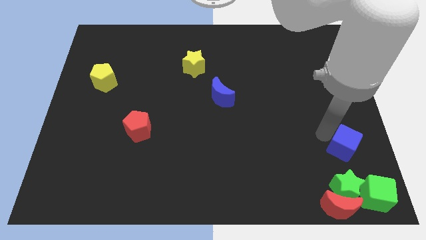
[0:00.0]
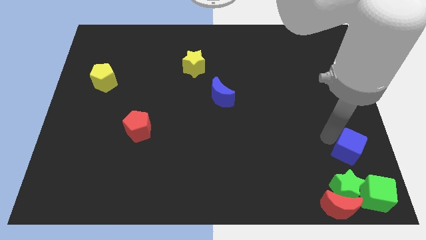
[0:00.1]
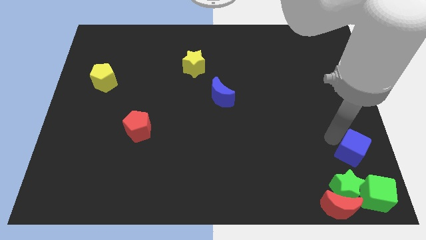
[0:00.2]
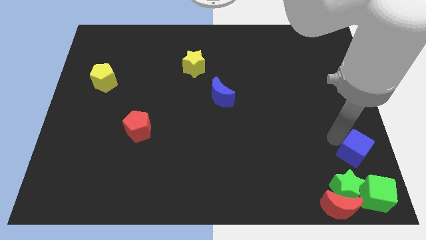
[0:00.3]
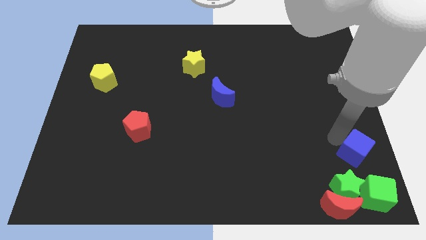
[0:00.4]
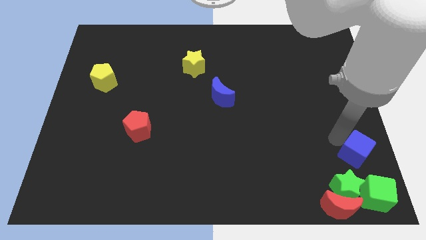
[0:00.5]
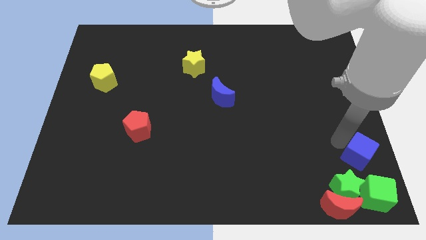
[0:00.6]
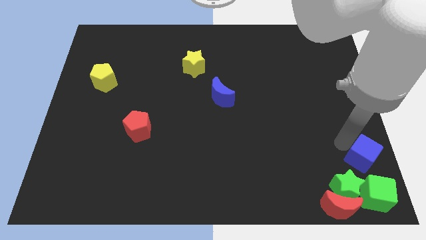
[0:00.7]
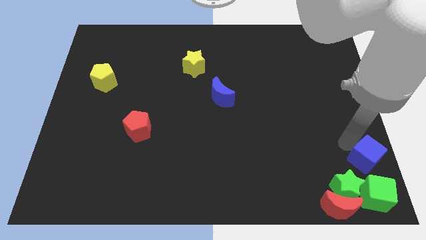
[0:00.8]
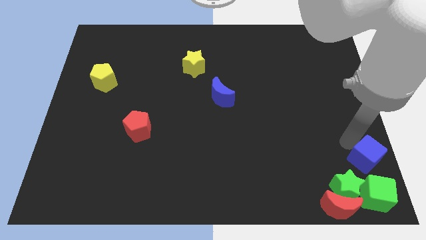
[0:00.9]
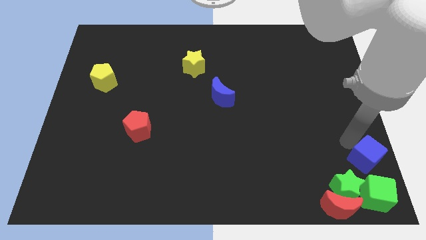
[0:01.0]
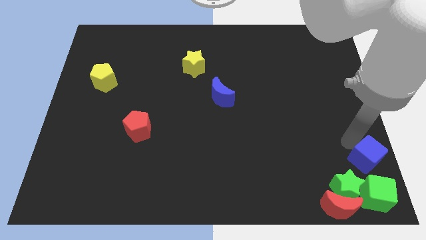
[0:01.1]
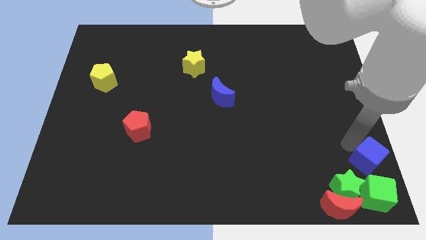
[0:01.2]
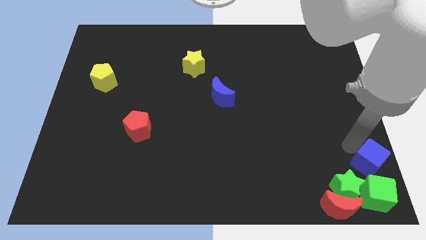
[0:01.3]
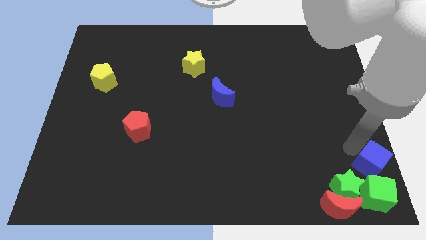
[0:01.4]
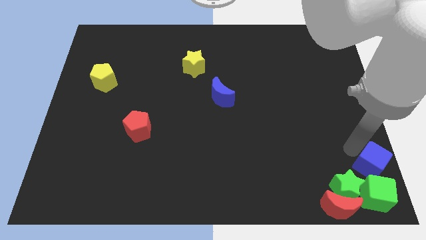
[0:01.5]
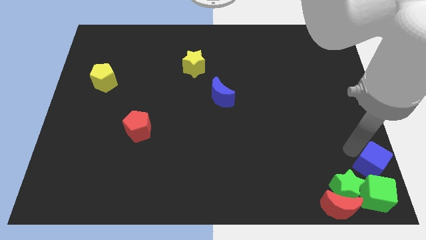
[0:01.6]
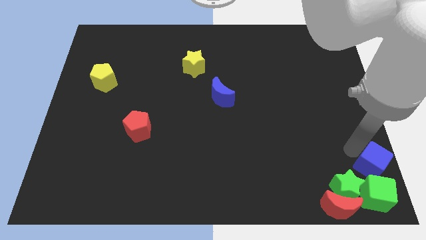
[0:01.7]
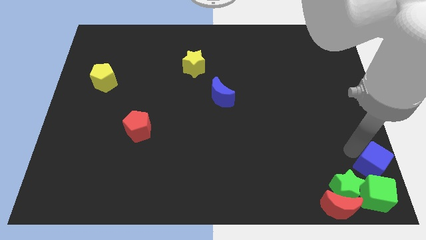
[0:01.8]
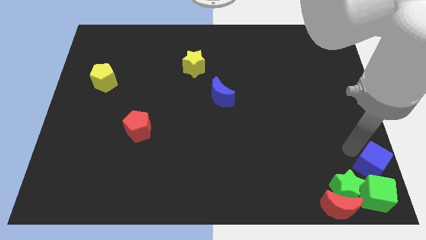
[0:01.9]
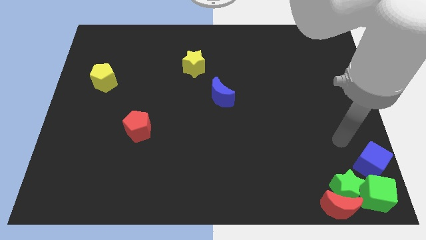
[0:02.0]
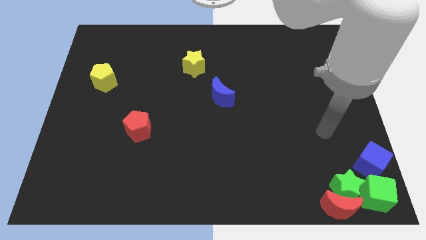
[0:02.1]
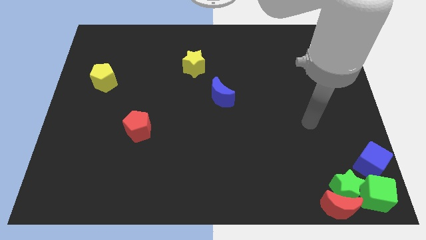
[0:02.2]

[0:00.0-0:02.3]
move the blue cube above to the green cube

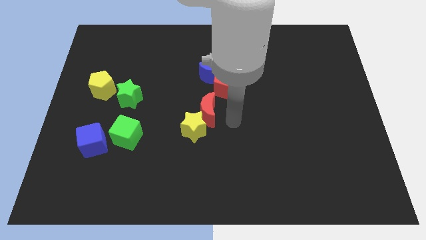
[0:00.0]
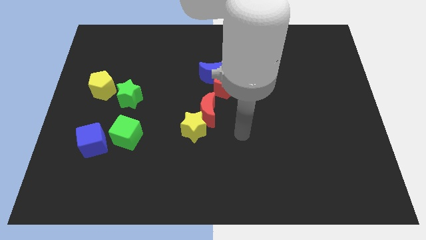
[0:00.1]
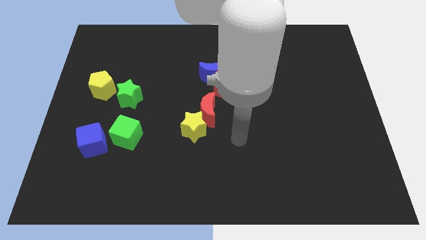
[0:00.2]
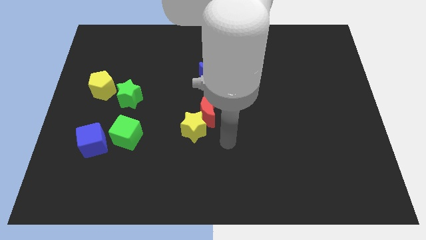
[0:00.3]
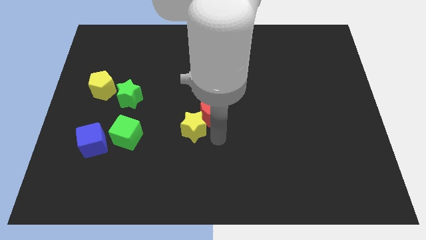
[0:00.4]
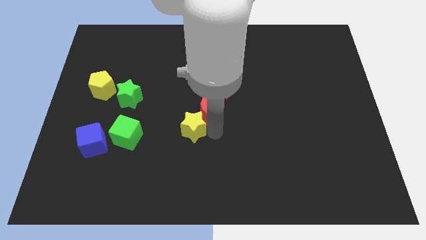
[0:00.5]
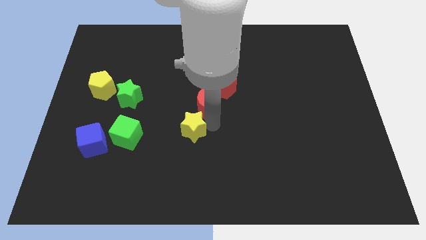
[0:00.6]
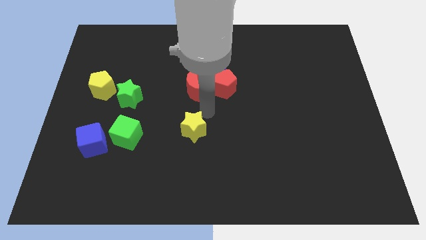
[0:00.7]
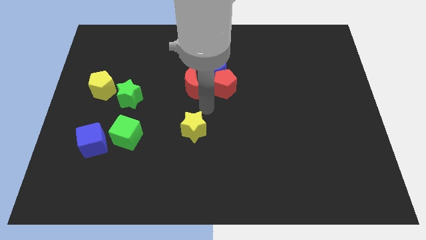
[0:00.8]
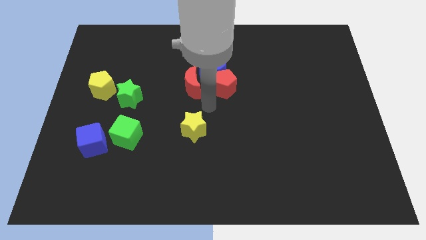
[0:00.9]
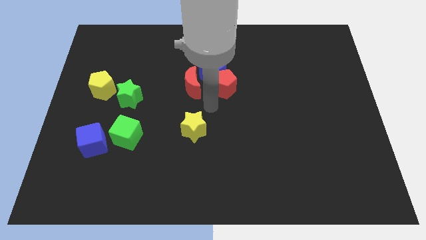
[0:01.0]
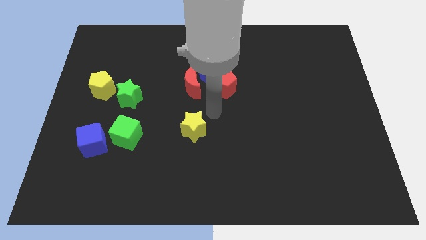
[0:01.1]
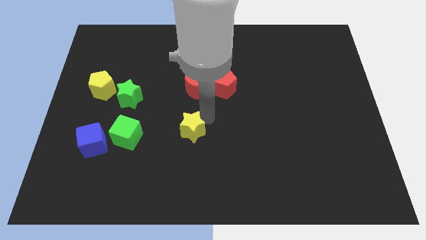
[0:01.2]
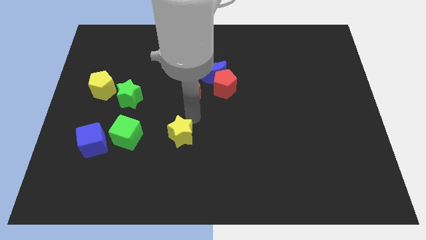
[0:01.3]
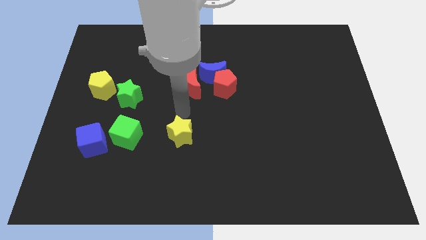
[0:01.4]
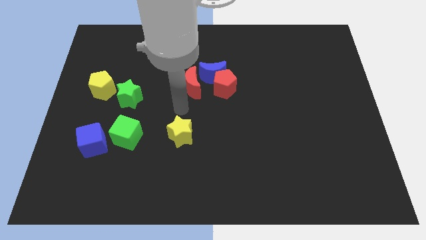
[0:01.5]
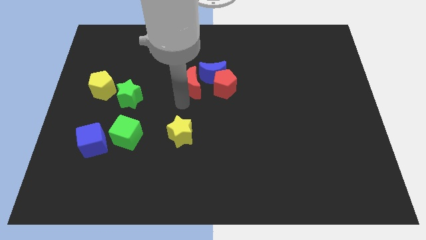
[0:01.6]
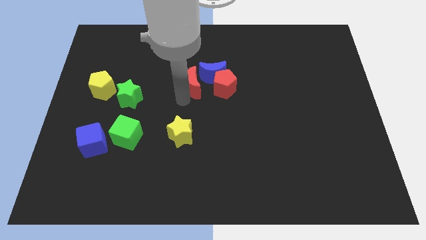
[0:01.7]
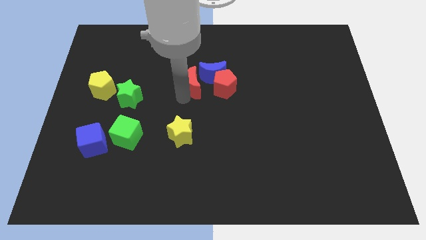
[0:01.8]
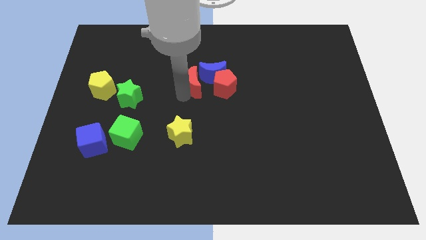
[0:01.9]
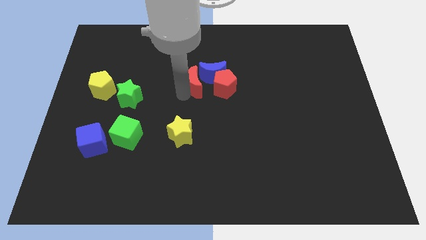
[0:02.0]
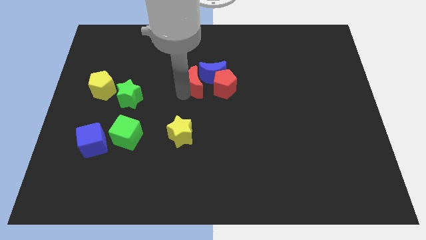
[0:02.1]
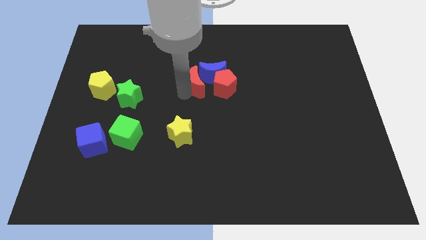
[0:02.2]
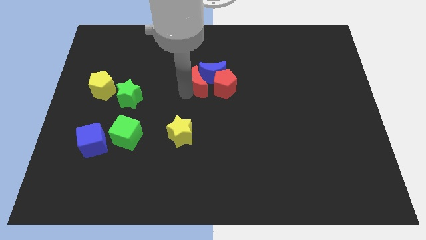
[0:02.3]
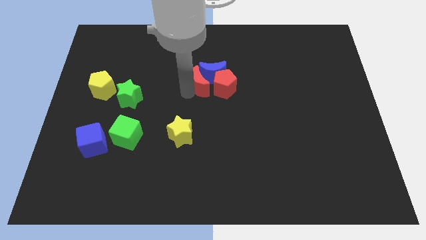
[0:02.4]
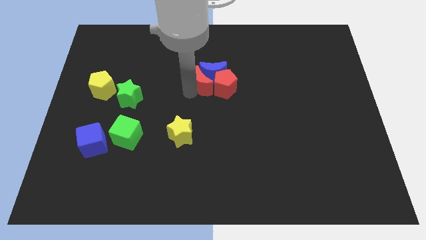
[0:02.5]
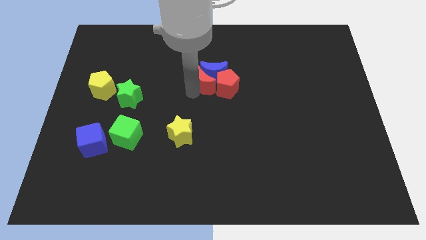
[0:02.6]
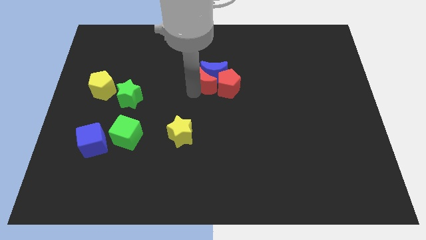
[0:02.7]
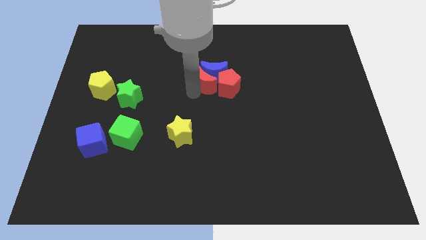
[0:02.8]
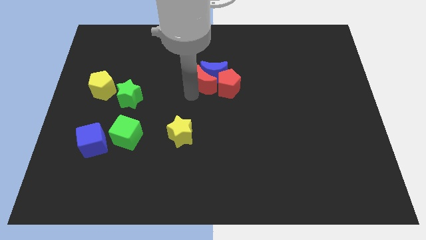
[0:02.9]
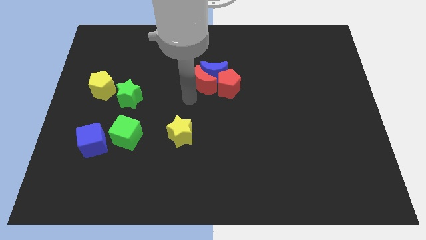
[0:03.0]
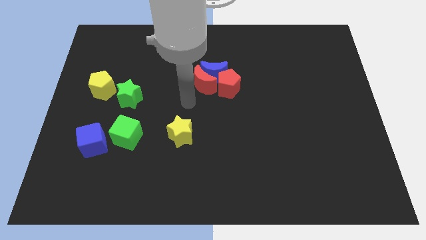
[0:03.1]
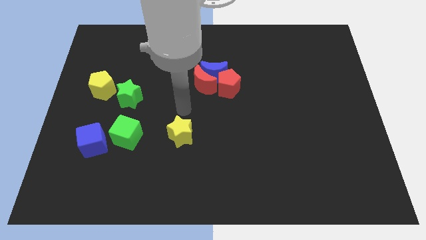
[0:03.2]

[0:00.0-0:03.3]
push the red crescent into the blue crescent

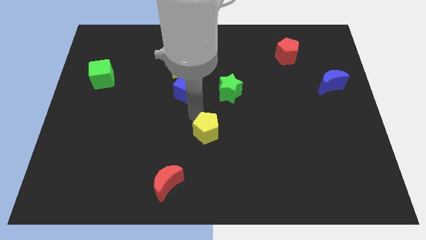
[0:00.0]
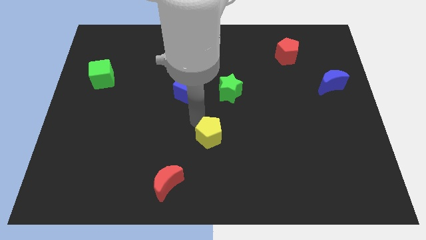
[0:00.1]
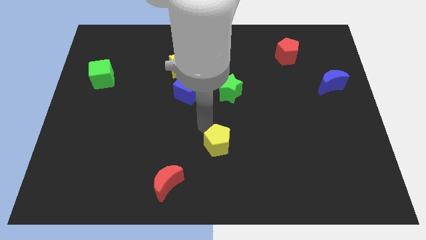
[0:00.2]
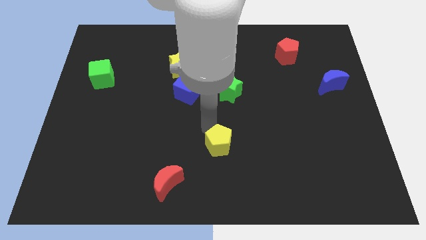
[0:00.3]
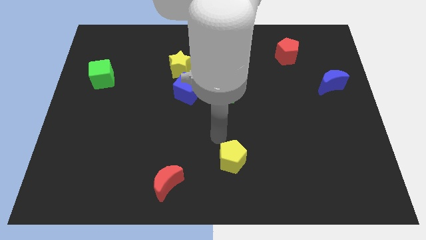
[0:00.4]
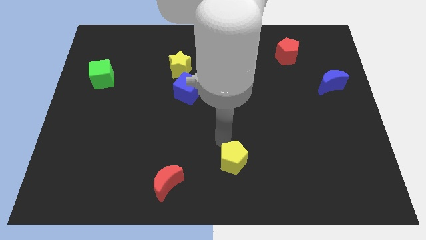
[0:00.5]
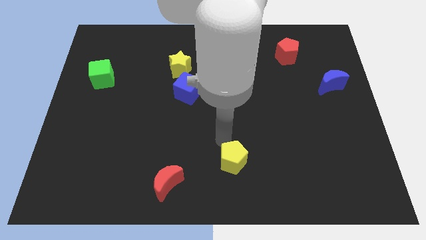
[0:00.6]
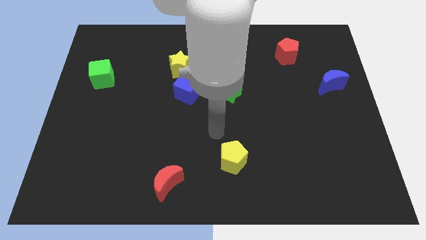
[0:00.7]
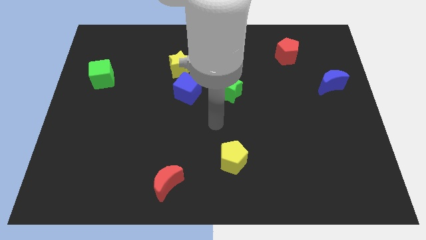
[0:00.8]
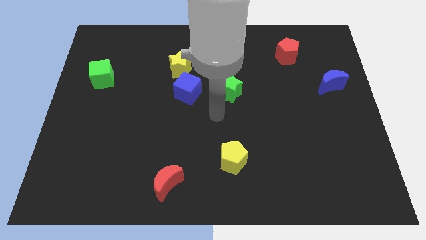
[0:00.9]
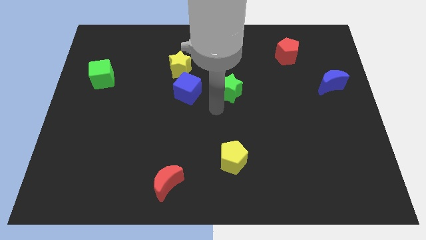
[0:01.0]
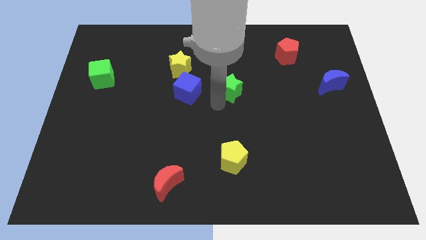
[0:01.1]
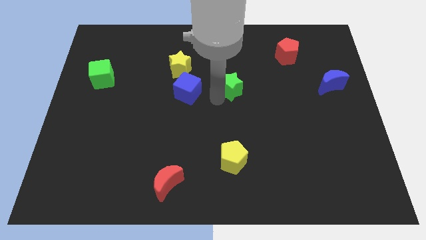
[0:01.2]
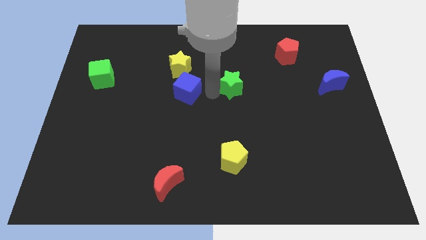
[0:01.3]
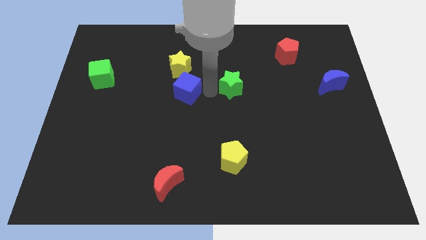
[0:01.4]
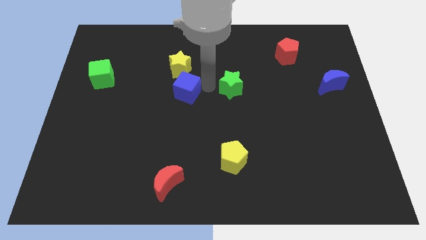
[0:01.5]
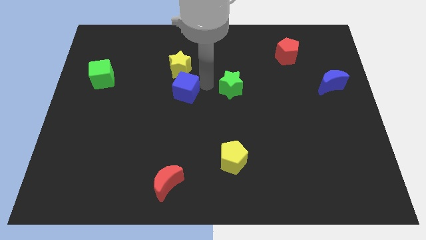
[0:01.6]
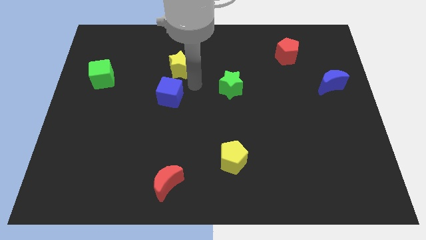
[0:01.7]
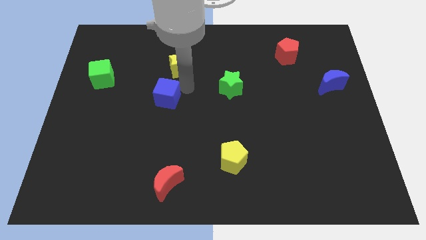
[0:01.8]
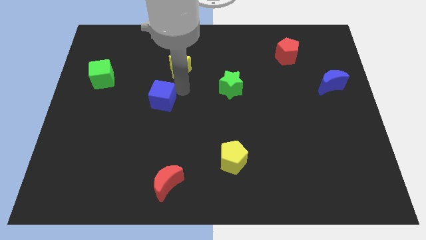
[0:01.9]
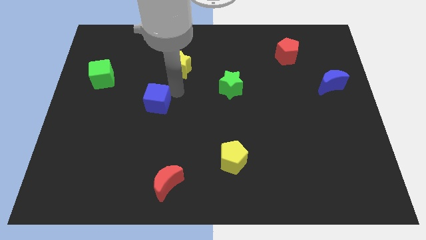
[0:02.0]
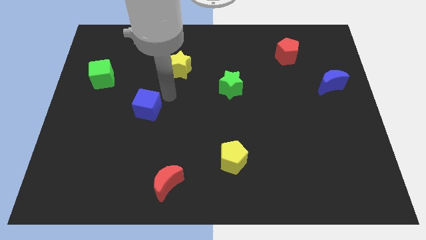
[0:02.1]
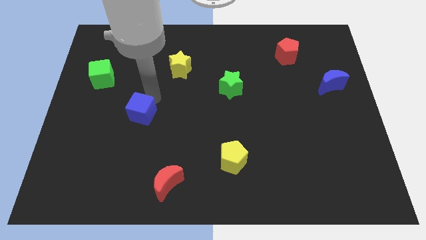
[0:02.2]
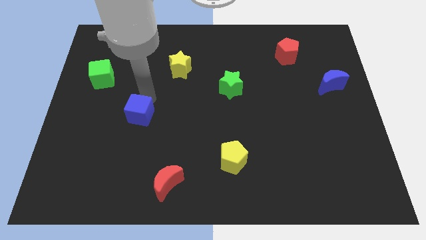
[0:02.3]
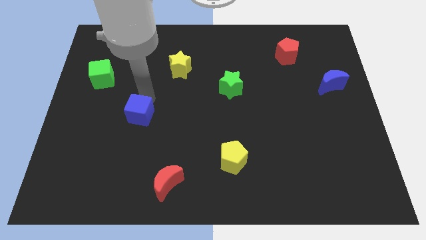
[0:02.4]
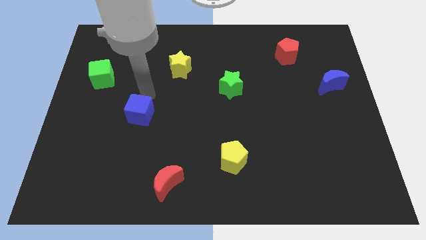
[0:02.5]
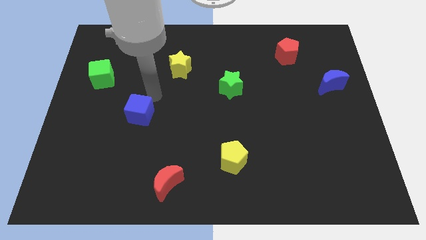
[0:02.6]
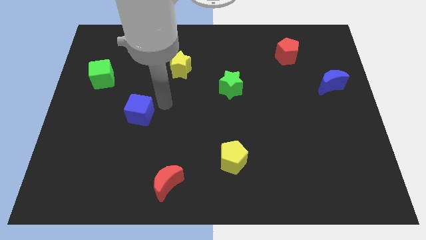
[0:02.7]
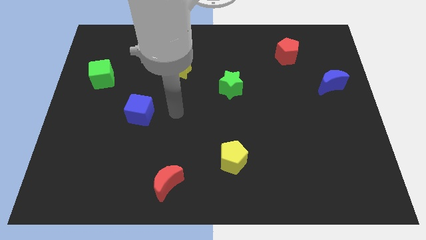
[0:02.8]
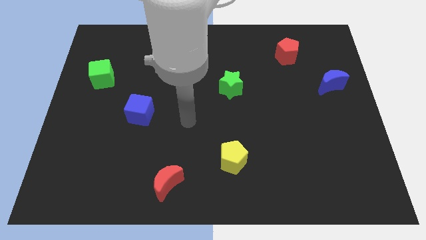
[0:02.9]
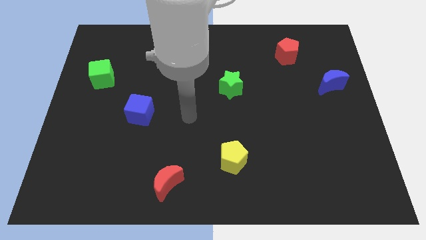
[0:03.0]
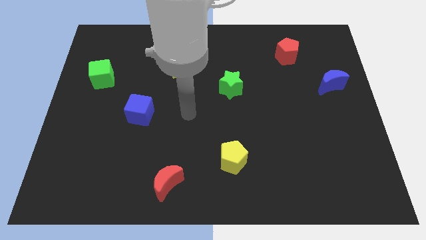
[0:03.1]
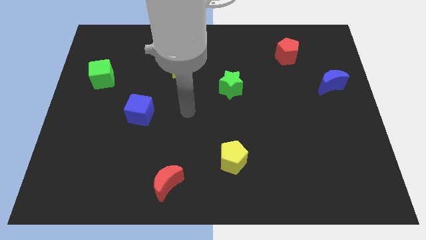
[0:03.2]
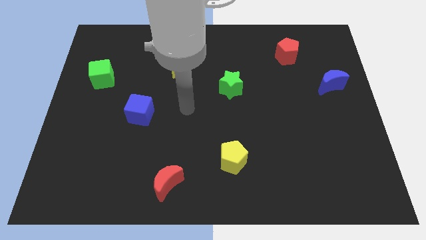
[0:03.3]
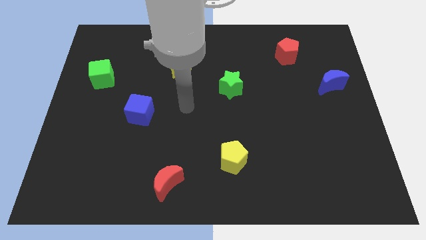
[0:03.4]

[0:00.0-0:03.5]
push the yellow pentagon diagonally down
